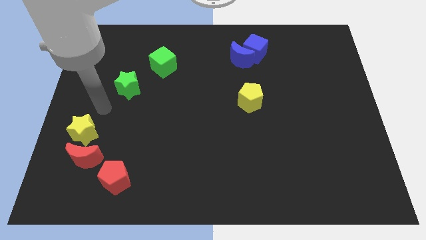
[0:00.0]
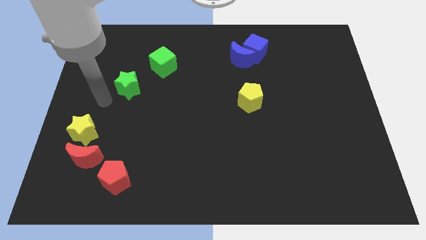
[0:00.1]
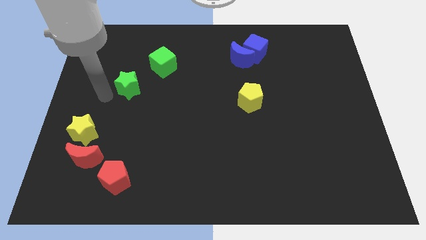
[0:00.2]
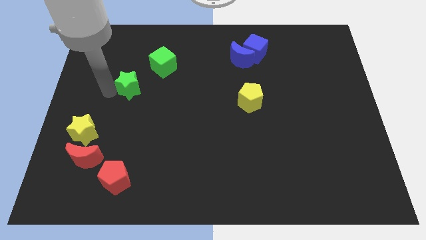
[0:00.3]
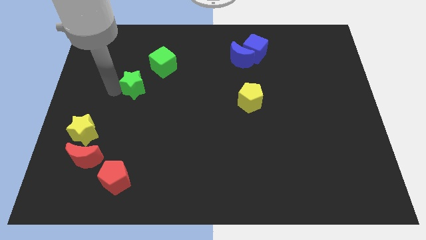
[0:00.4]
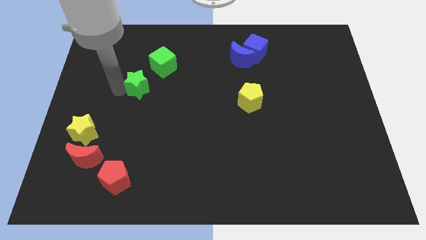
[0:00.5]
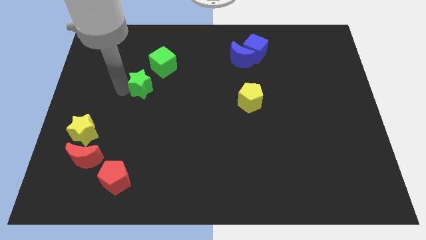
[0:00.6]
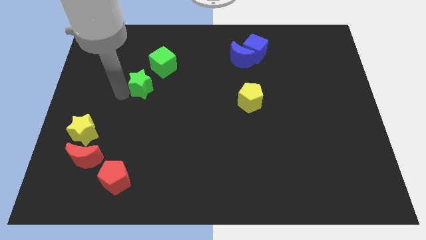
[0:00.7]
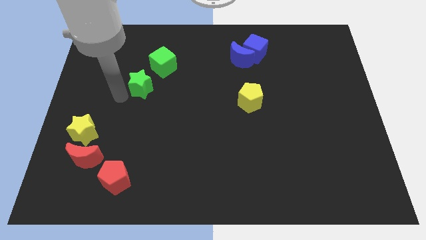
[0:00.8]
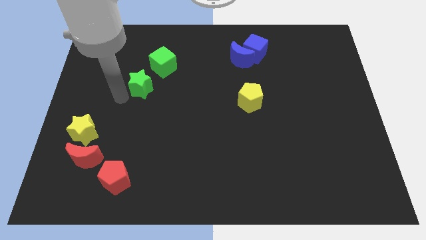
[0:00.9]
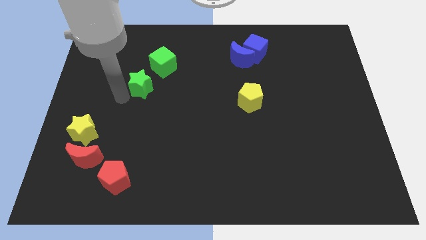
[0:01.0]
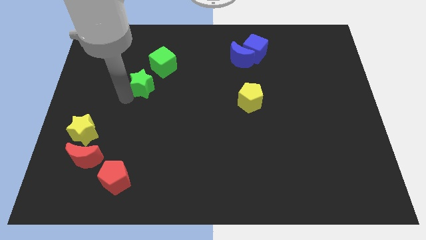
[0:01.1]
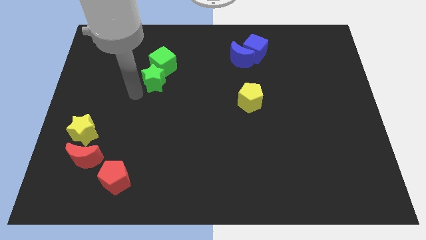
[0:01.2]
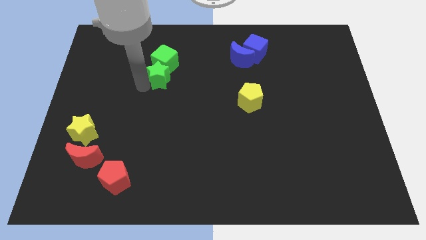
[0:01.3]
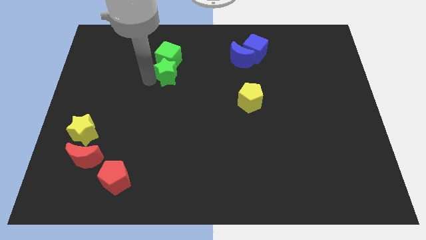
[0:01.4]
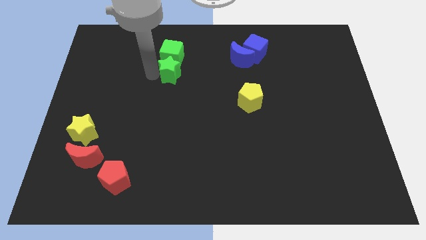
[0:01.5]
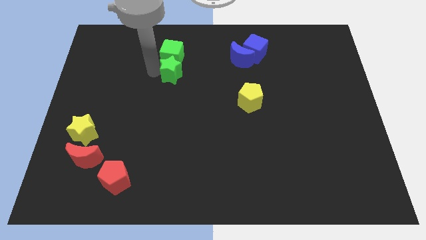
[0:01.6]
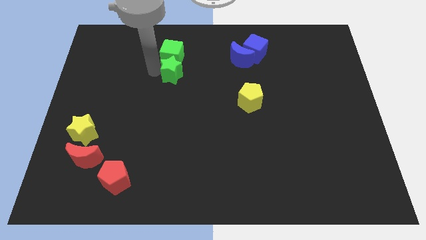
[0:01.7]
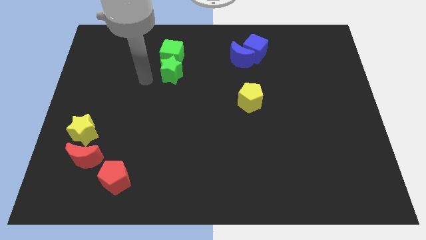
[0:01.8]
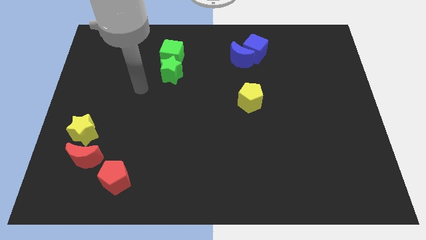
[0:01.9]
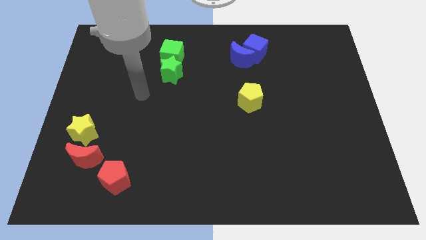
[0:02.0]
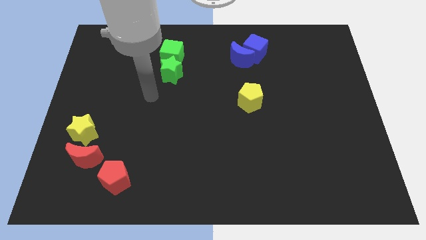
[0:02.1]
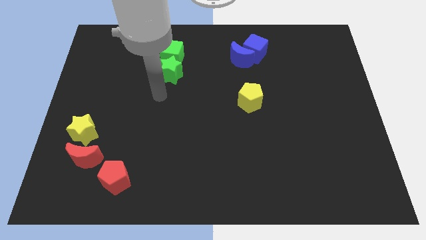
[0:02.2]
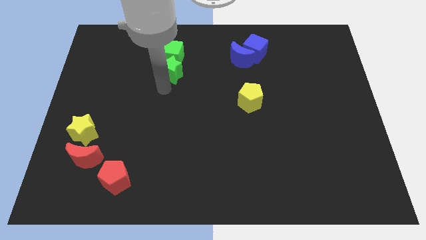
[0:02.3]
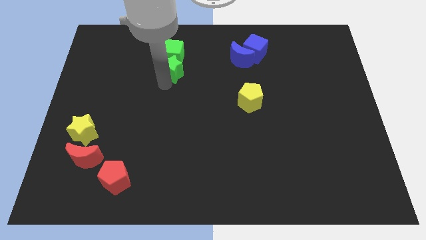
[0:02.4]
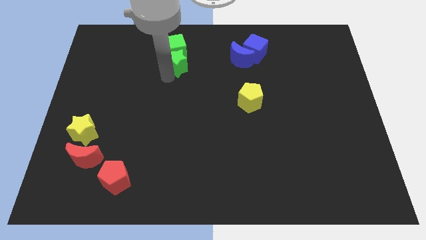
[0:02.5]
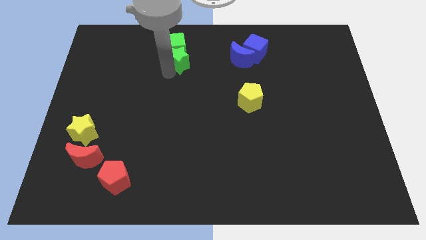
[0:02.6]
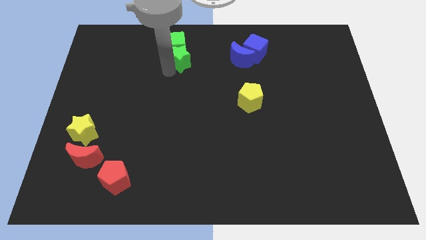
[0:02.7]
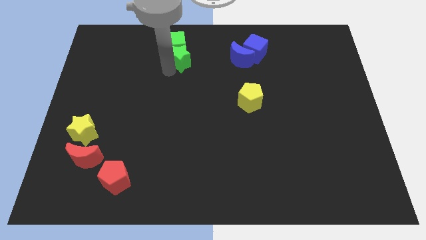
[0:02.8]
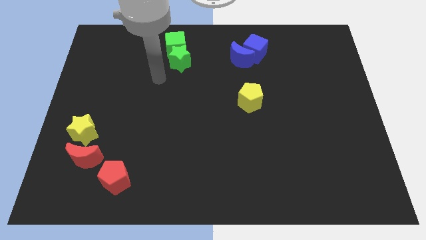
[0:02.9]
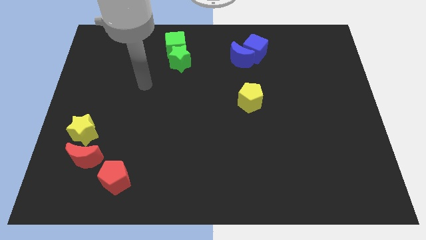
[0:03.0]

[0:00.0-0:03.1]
push green blocks towards center top

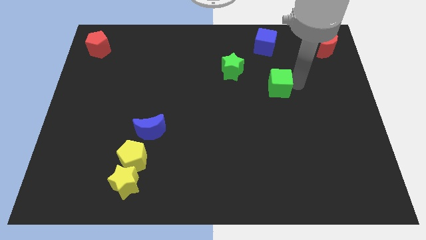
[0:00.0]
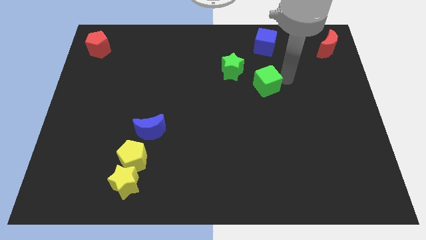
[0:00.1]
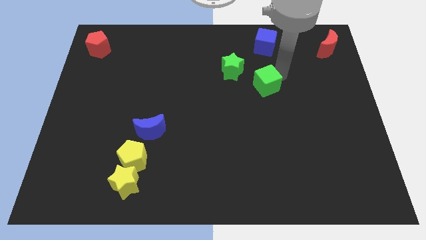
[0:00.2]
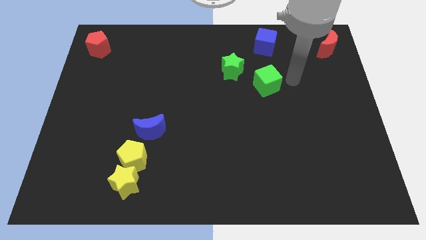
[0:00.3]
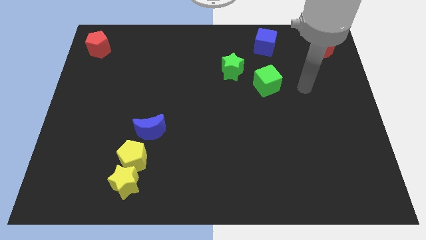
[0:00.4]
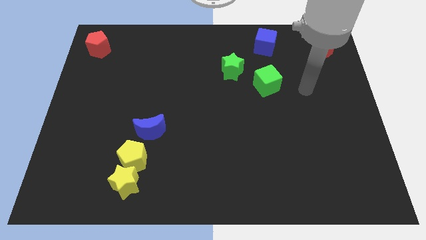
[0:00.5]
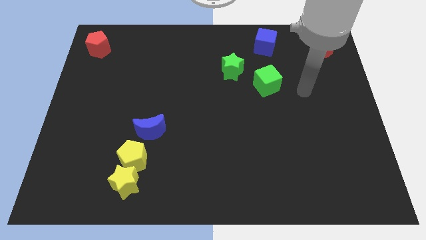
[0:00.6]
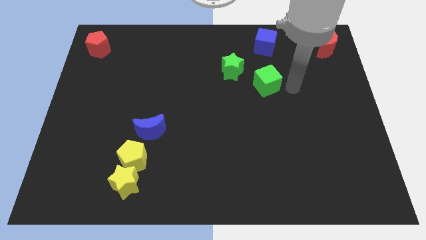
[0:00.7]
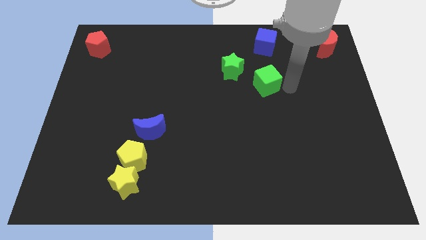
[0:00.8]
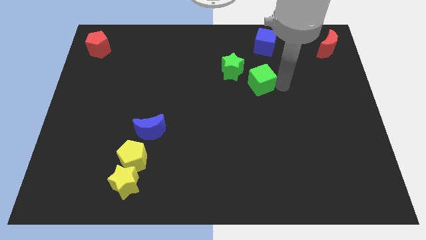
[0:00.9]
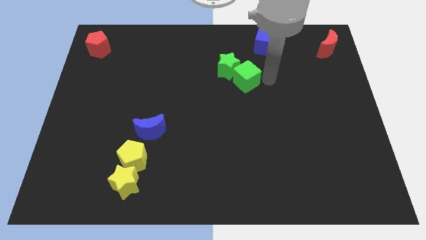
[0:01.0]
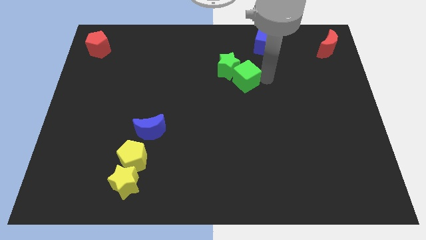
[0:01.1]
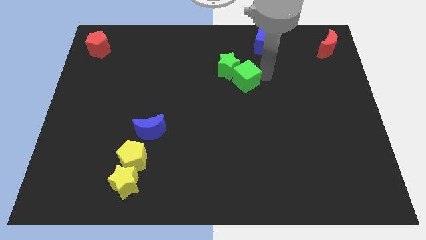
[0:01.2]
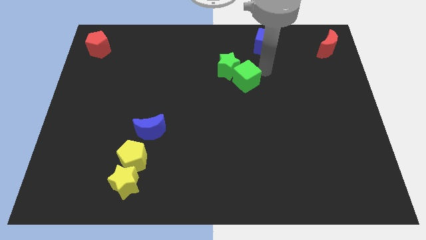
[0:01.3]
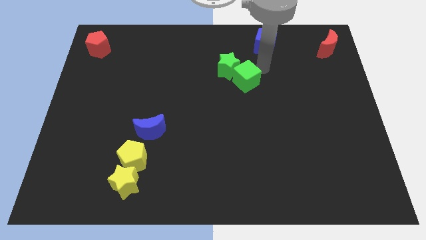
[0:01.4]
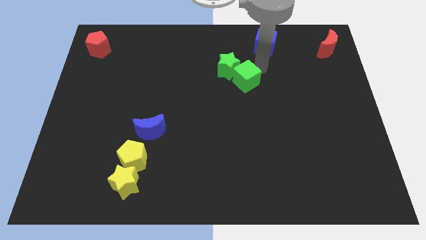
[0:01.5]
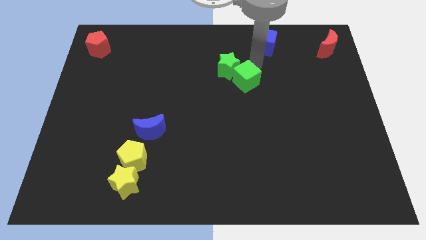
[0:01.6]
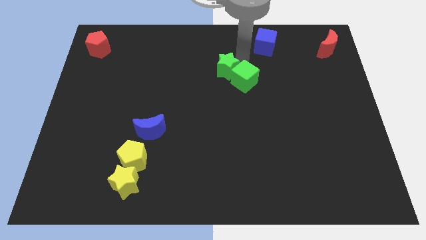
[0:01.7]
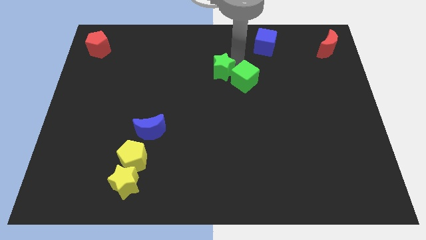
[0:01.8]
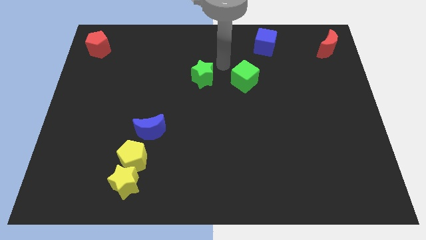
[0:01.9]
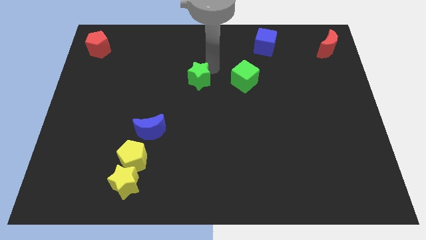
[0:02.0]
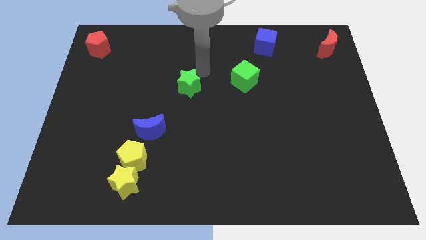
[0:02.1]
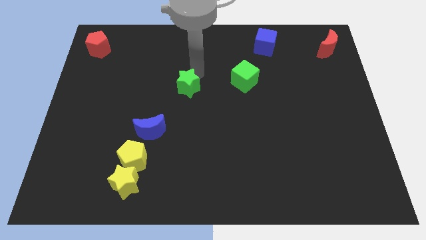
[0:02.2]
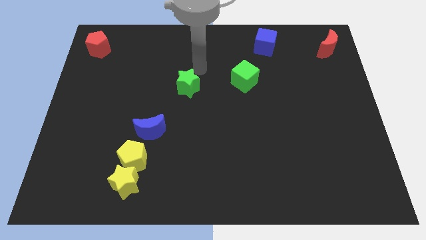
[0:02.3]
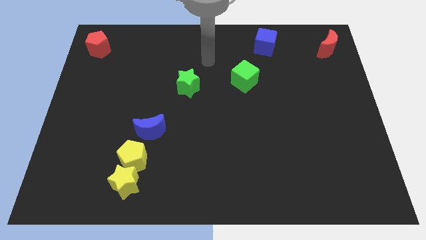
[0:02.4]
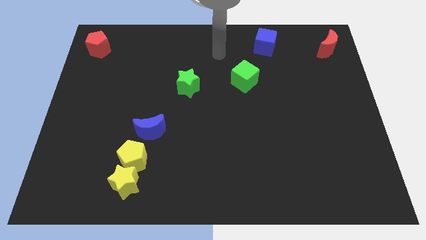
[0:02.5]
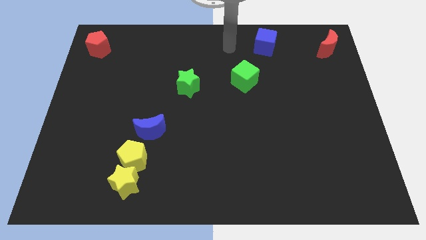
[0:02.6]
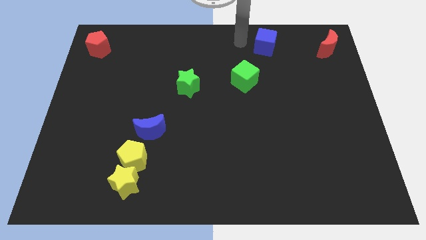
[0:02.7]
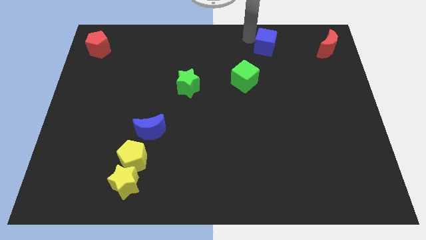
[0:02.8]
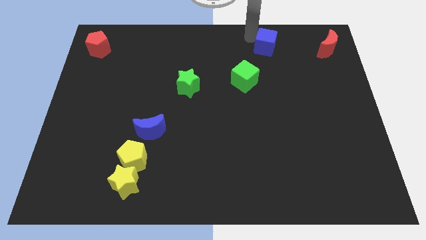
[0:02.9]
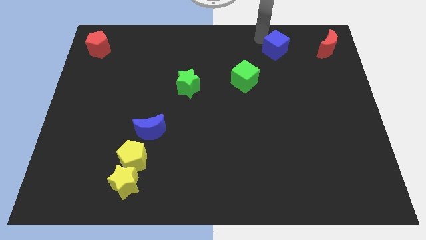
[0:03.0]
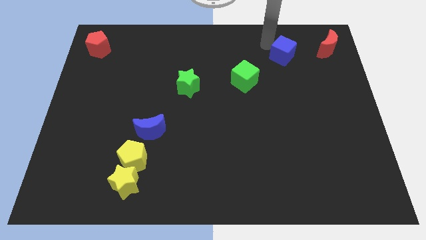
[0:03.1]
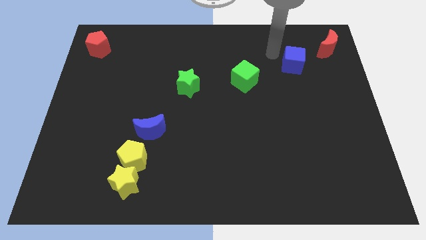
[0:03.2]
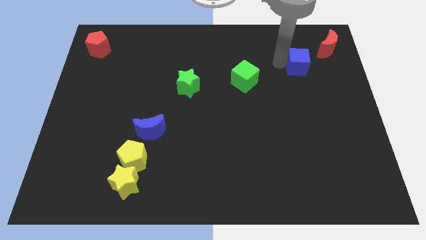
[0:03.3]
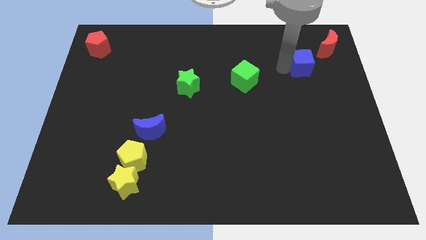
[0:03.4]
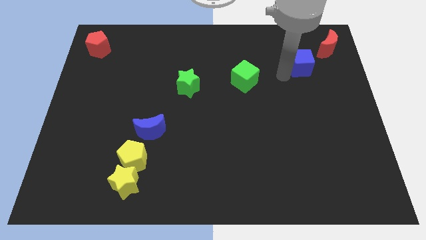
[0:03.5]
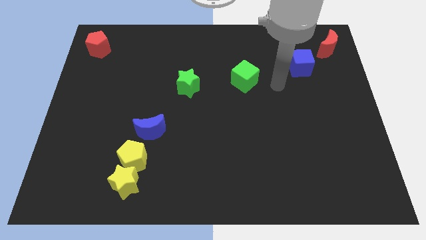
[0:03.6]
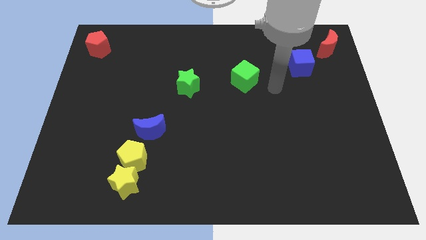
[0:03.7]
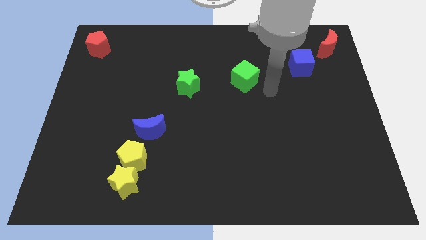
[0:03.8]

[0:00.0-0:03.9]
form a diagonal line out of green blocks and the blue cube

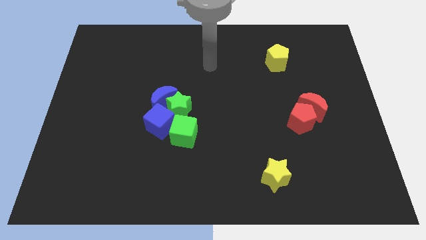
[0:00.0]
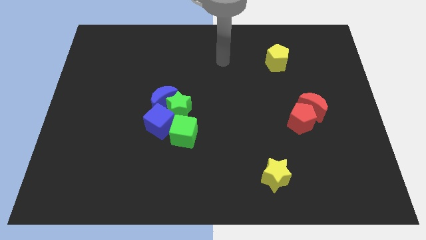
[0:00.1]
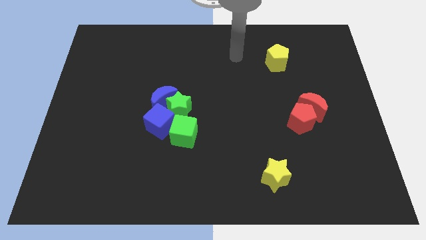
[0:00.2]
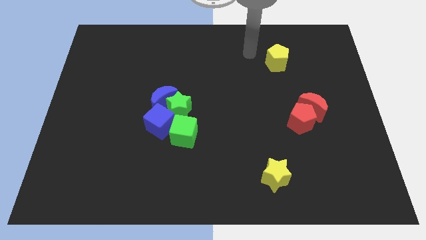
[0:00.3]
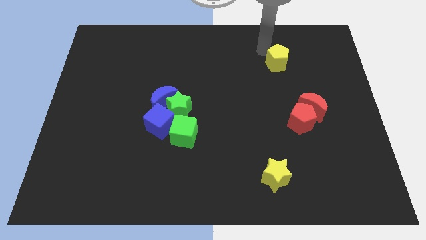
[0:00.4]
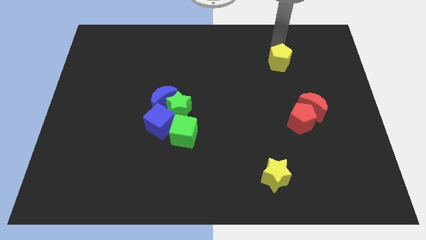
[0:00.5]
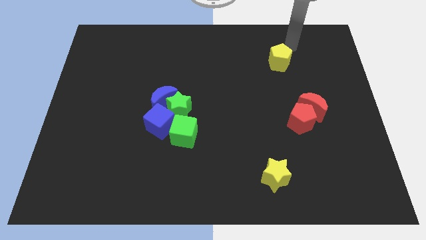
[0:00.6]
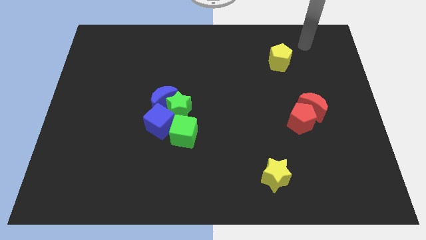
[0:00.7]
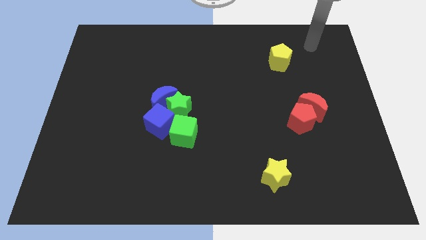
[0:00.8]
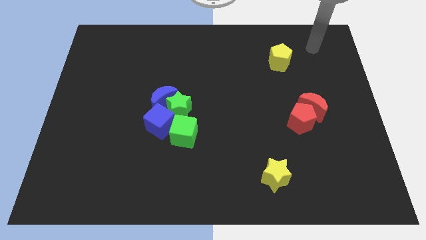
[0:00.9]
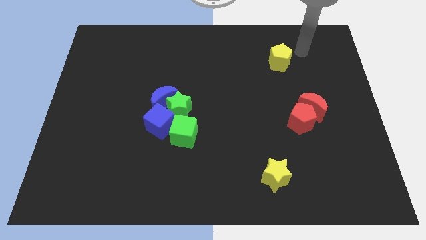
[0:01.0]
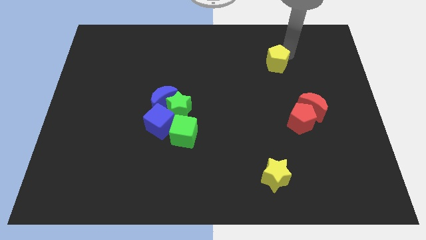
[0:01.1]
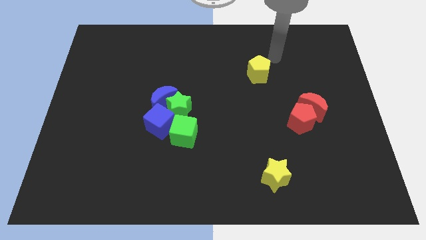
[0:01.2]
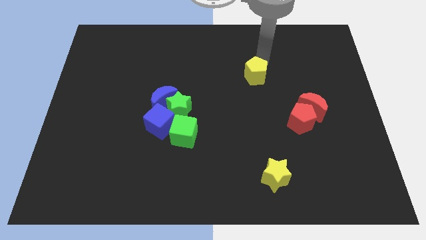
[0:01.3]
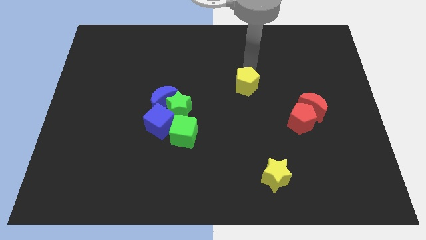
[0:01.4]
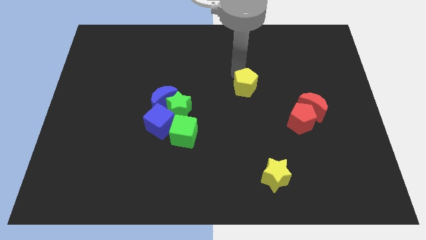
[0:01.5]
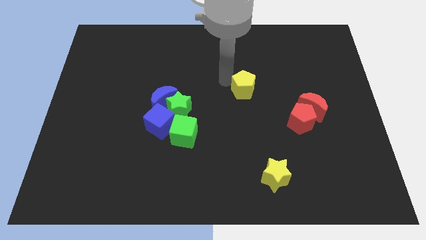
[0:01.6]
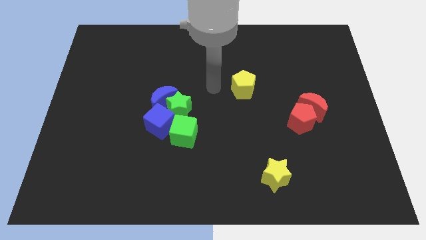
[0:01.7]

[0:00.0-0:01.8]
slide the yellow pentagon slightly to the bottom side of the board

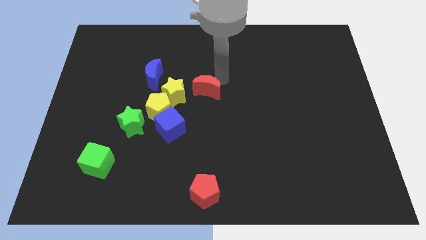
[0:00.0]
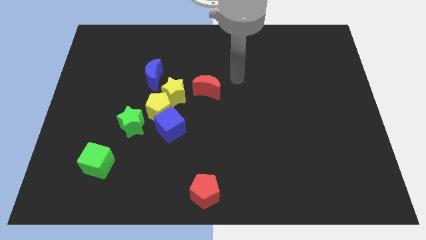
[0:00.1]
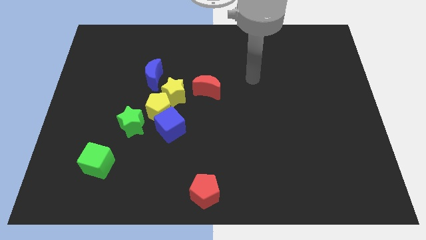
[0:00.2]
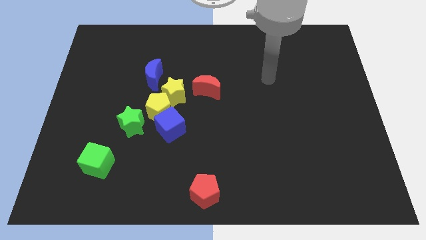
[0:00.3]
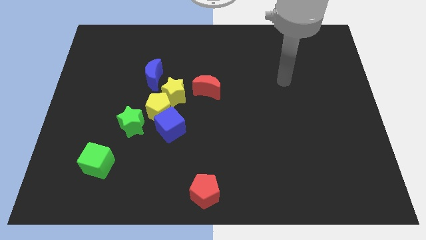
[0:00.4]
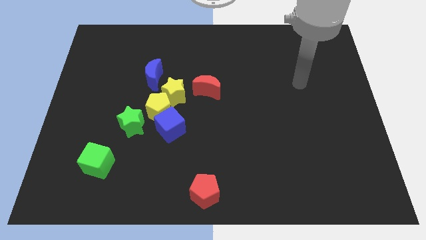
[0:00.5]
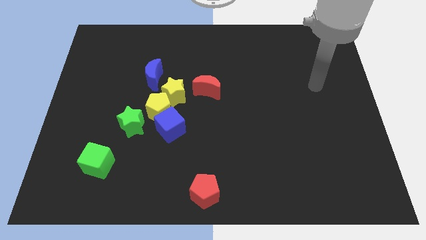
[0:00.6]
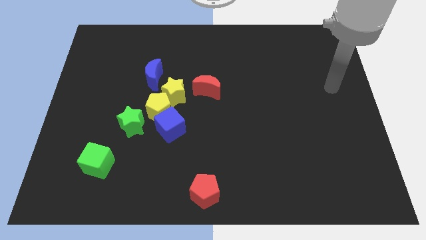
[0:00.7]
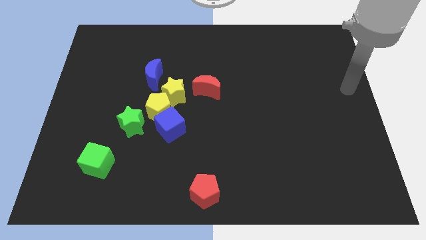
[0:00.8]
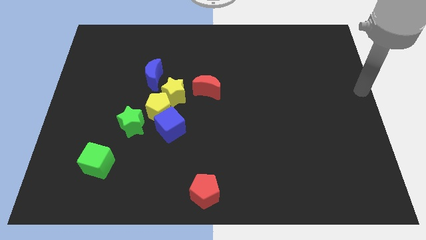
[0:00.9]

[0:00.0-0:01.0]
place arm at the center right
